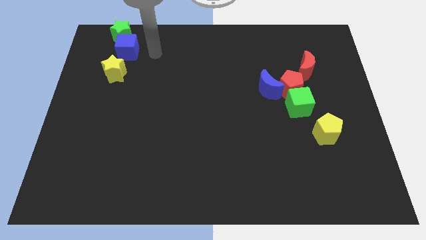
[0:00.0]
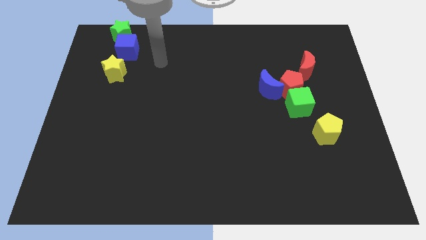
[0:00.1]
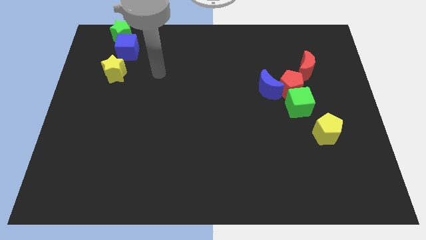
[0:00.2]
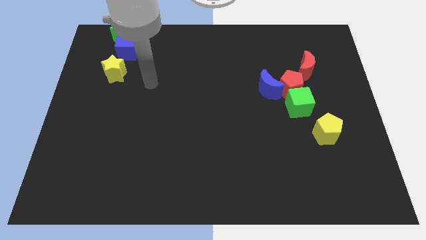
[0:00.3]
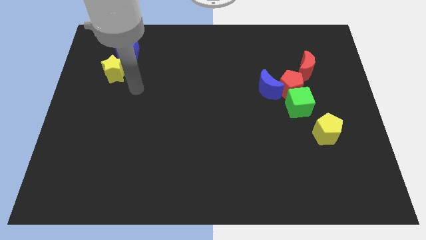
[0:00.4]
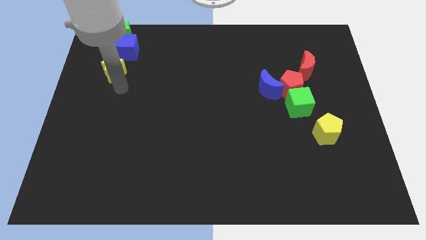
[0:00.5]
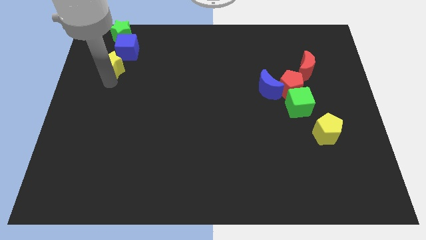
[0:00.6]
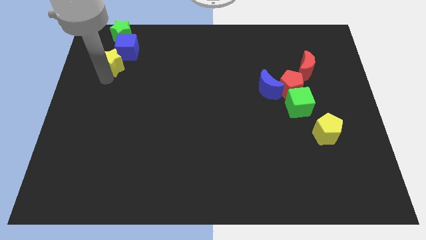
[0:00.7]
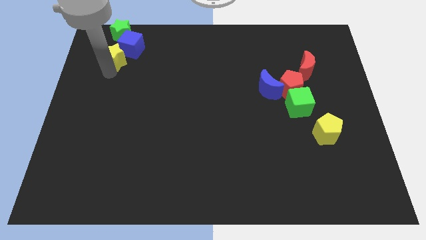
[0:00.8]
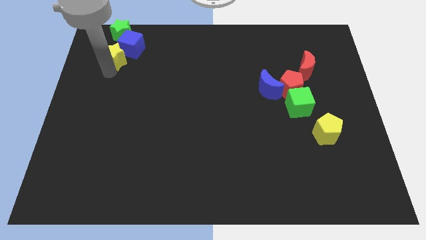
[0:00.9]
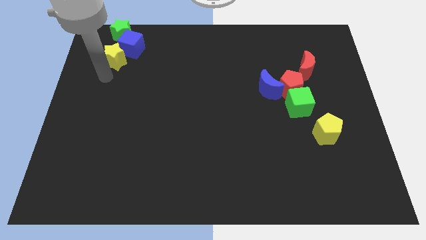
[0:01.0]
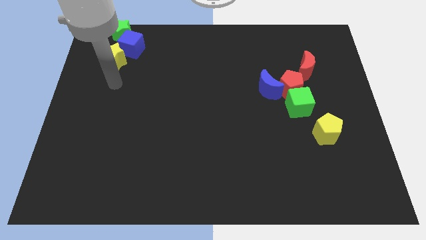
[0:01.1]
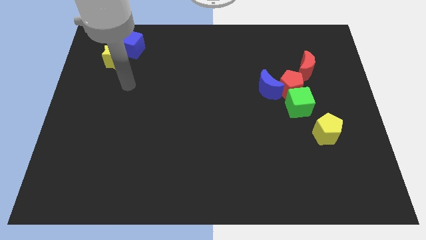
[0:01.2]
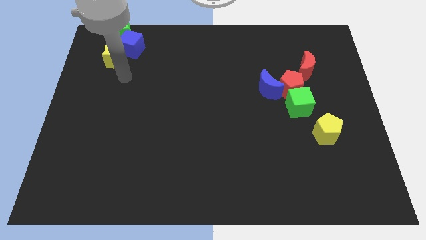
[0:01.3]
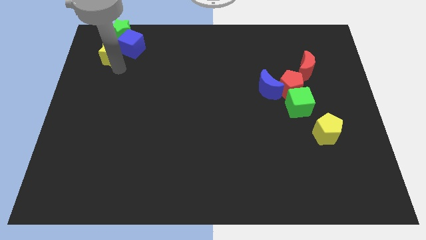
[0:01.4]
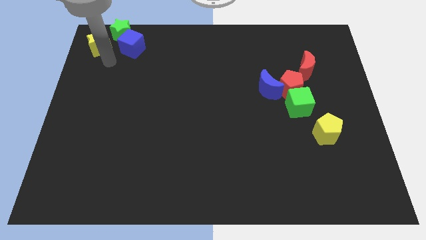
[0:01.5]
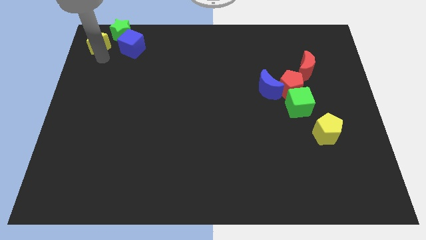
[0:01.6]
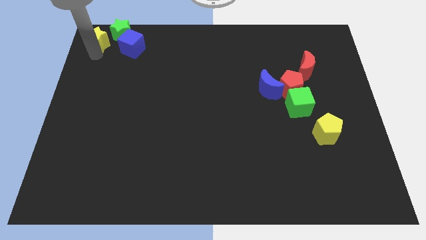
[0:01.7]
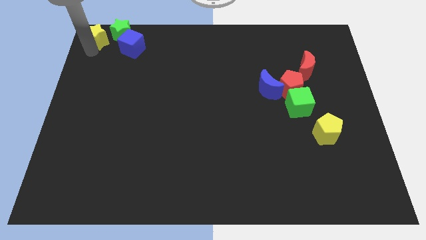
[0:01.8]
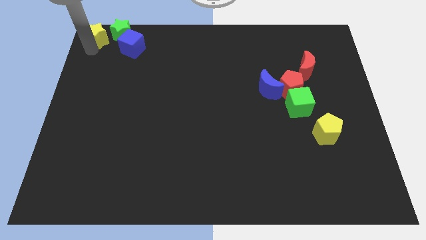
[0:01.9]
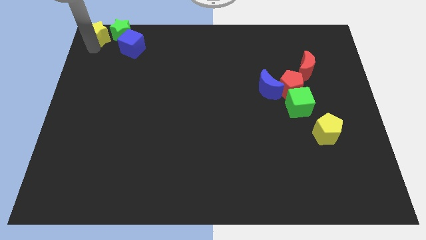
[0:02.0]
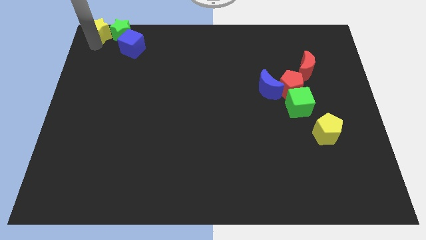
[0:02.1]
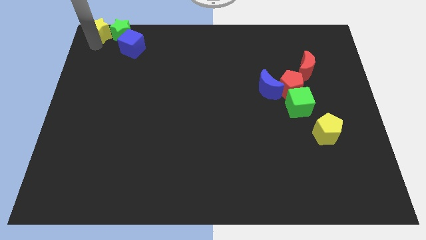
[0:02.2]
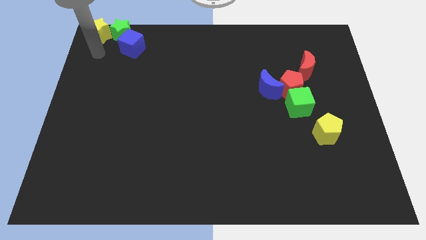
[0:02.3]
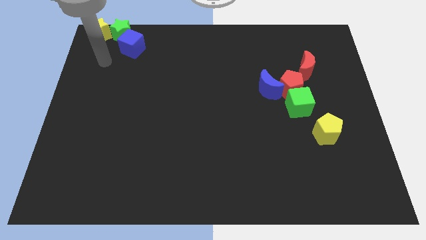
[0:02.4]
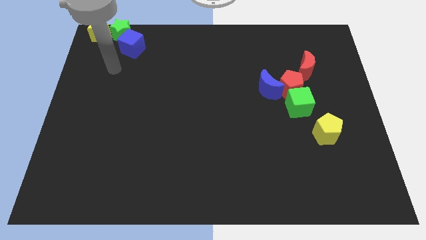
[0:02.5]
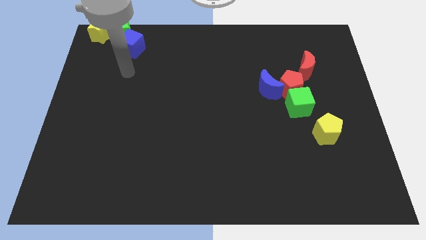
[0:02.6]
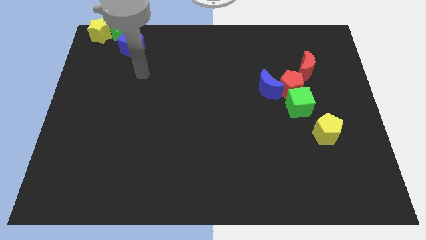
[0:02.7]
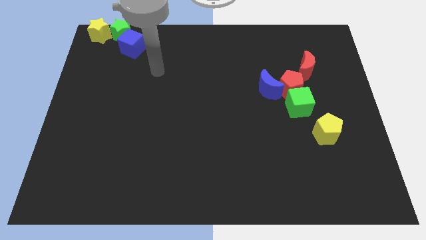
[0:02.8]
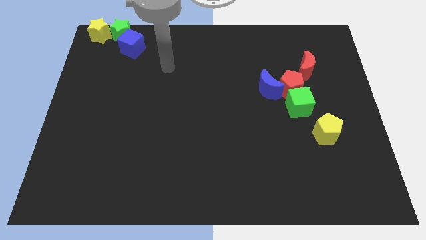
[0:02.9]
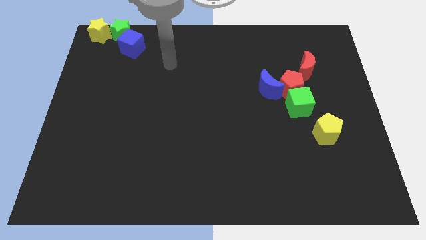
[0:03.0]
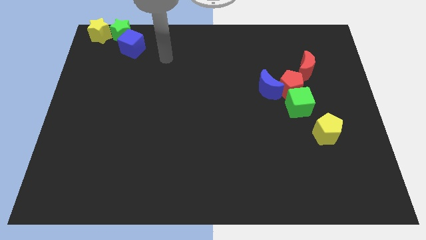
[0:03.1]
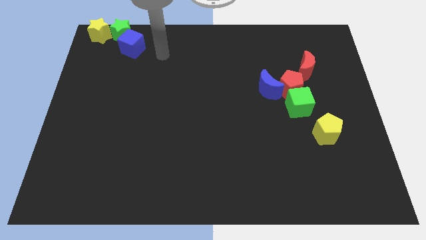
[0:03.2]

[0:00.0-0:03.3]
slide the yellow star to the left side of the green star

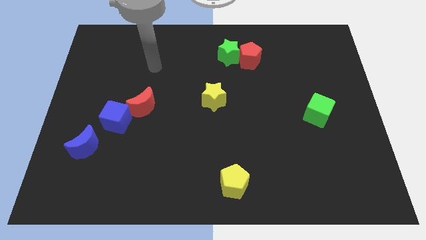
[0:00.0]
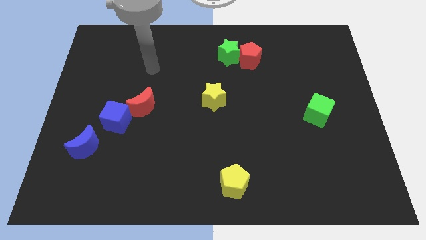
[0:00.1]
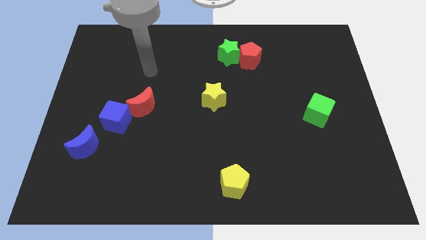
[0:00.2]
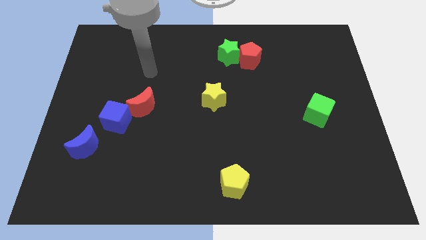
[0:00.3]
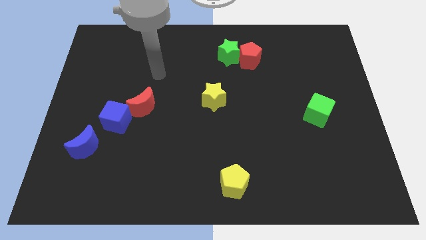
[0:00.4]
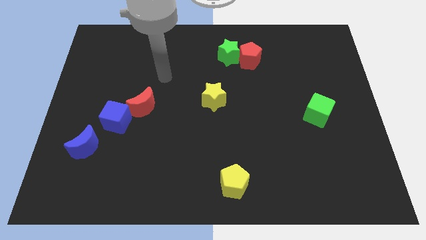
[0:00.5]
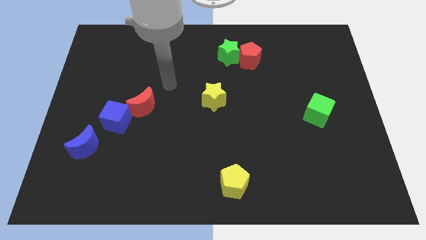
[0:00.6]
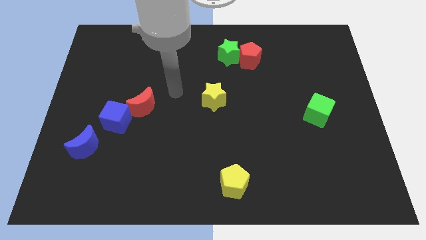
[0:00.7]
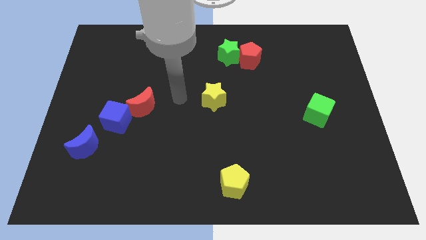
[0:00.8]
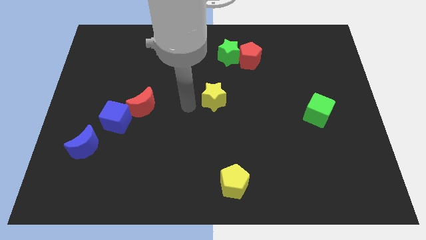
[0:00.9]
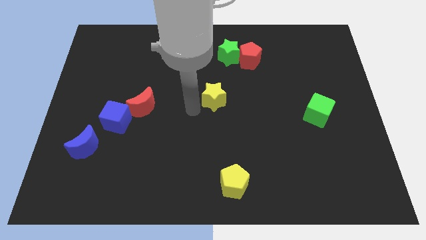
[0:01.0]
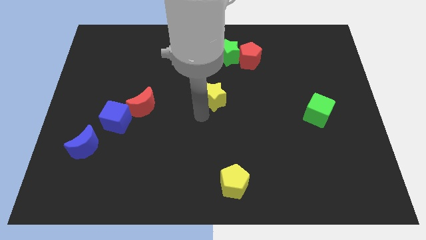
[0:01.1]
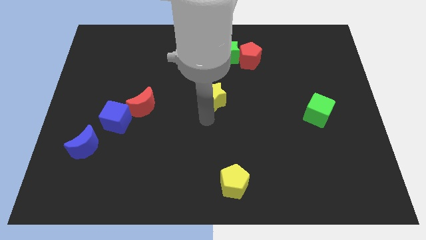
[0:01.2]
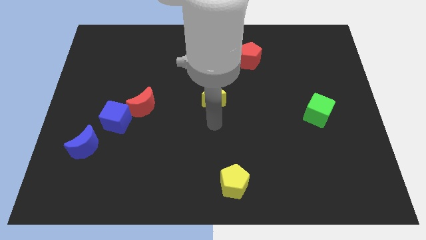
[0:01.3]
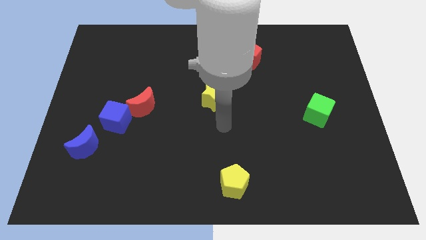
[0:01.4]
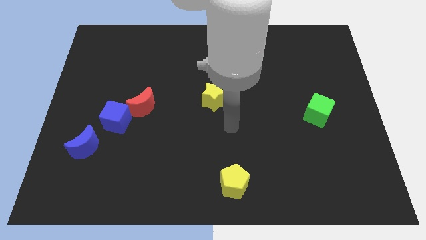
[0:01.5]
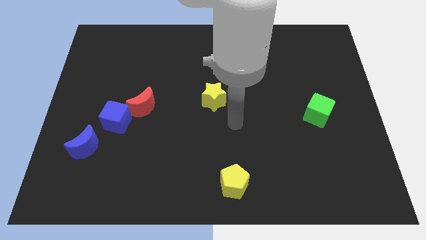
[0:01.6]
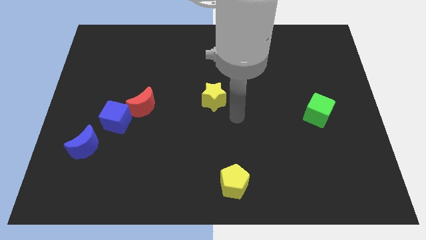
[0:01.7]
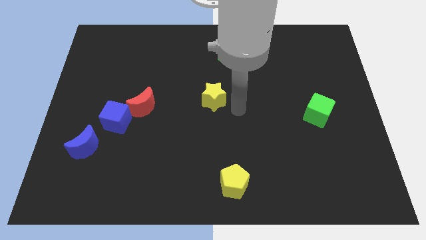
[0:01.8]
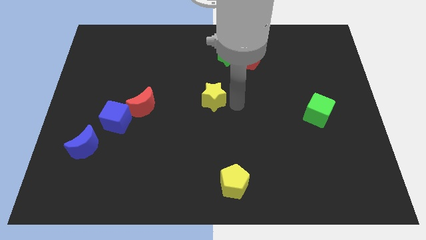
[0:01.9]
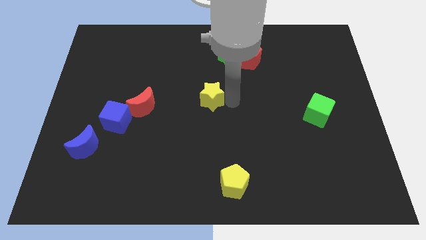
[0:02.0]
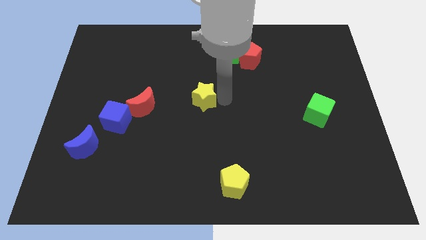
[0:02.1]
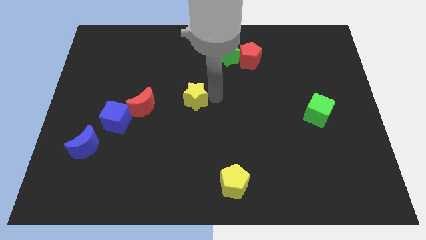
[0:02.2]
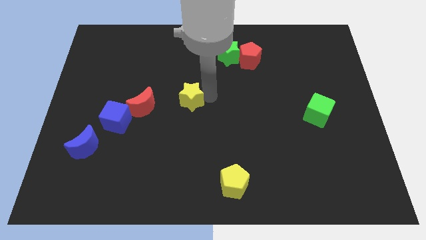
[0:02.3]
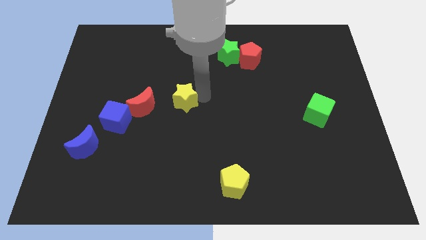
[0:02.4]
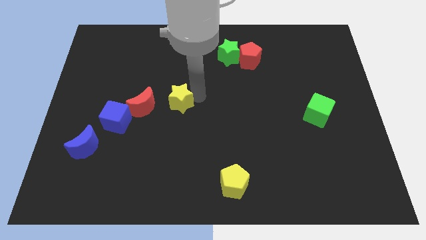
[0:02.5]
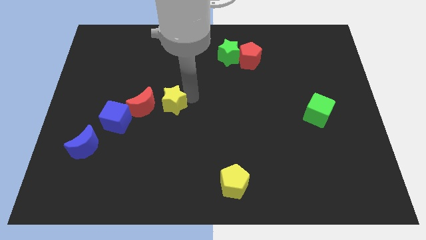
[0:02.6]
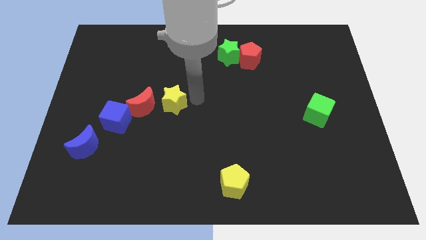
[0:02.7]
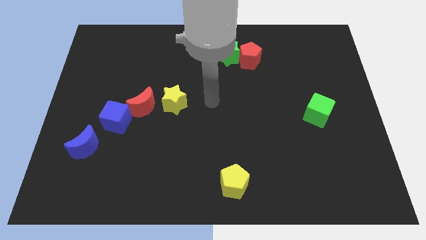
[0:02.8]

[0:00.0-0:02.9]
move the yellow star close to the red crescent

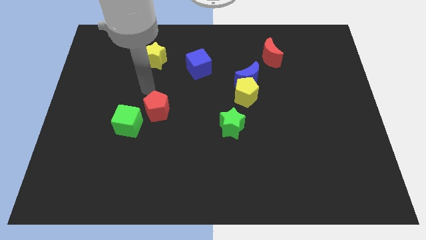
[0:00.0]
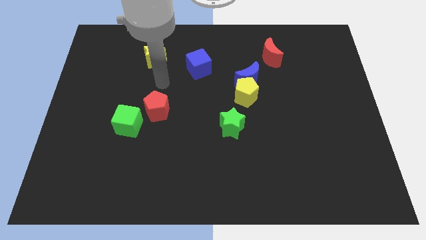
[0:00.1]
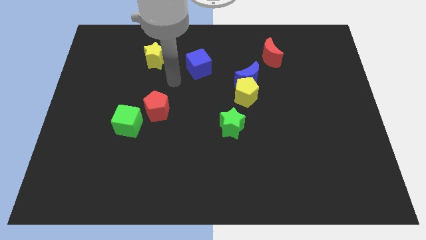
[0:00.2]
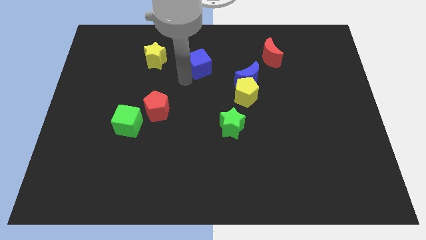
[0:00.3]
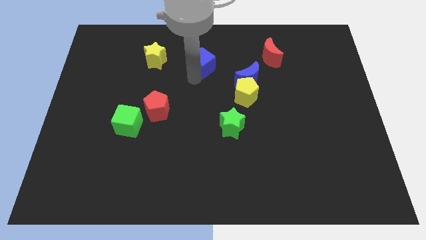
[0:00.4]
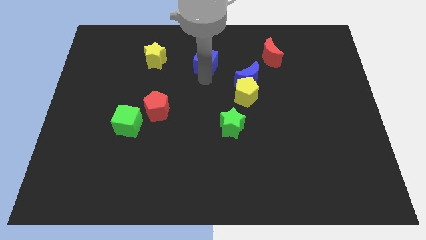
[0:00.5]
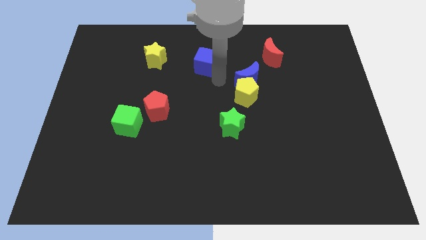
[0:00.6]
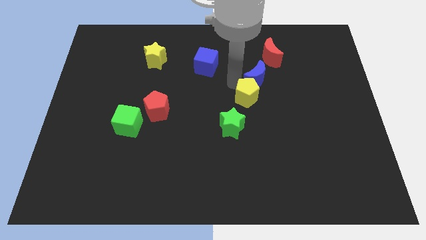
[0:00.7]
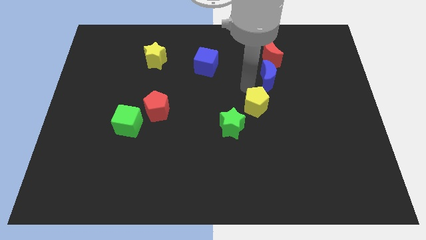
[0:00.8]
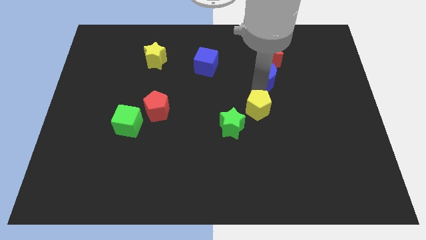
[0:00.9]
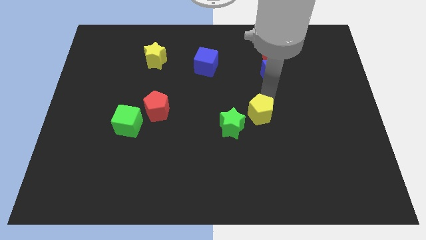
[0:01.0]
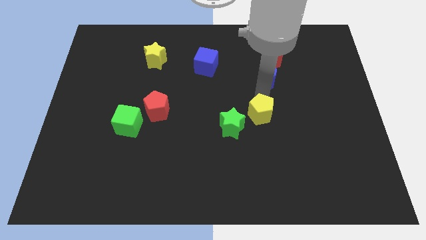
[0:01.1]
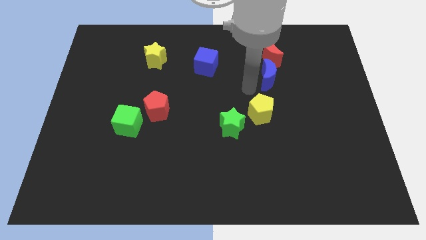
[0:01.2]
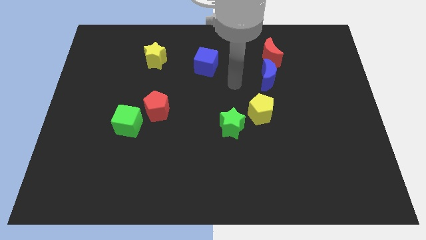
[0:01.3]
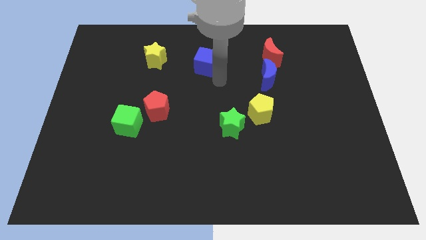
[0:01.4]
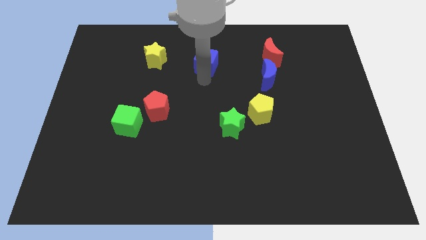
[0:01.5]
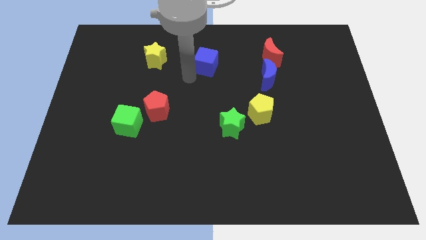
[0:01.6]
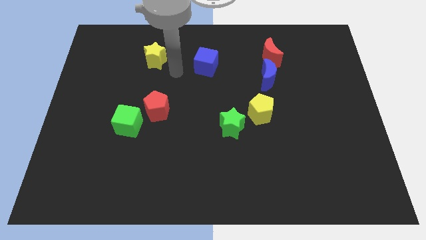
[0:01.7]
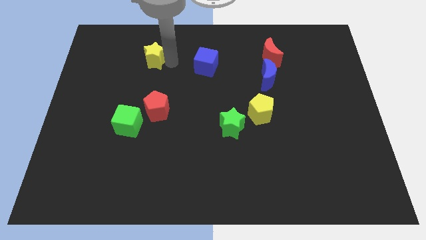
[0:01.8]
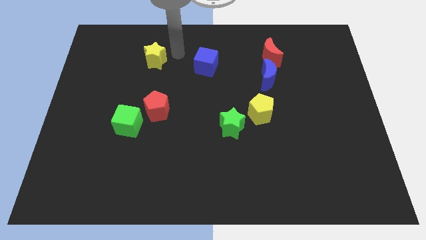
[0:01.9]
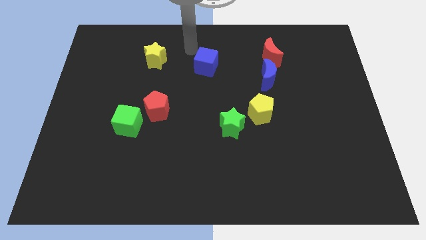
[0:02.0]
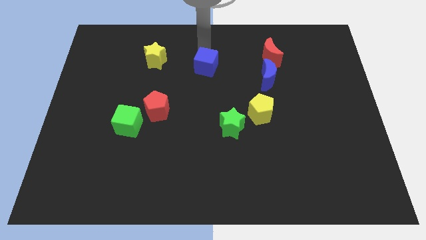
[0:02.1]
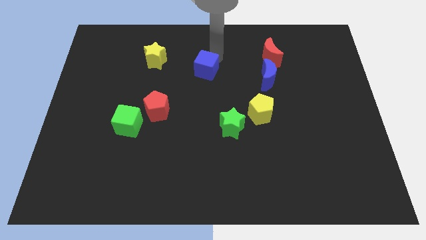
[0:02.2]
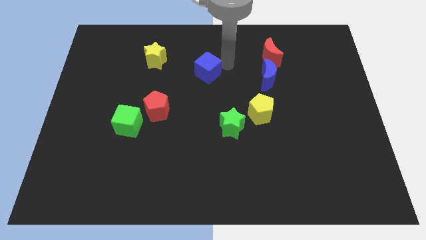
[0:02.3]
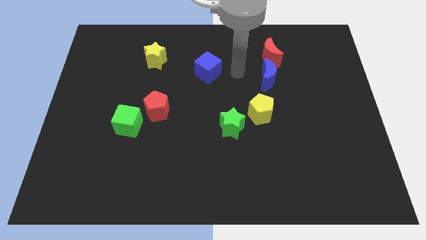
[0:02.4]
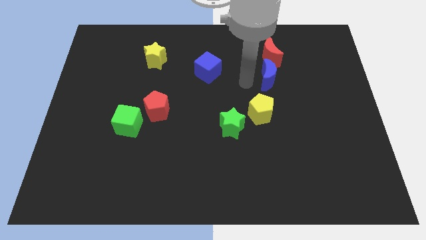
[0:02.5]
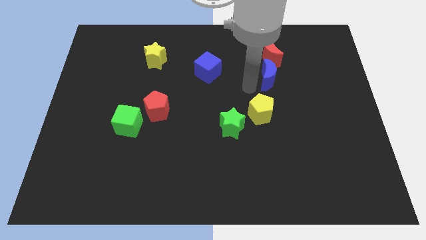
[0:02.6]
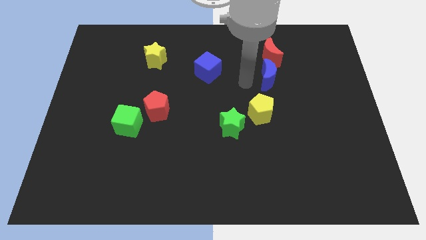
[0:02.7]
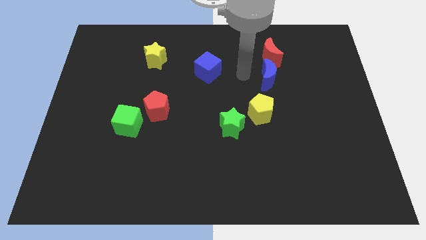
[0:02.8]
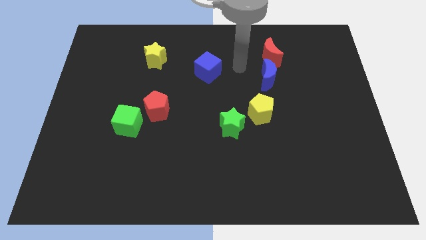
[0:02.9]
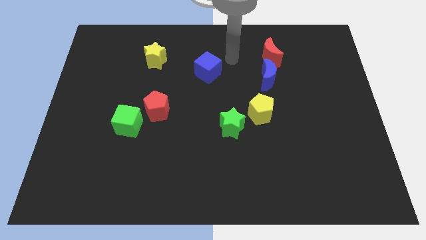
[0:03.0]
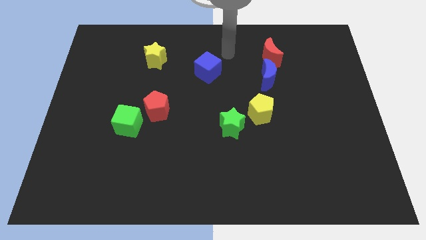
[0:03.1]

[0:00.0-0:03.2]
push the yellow pentagon to the right
